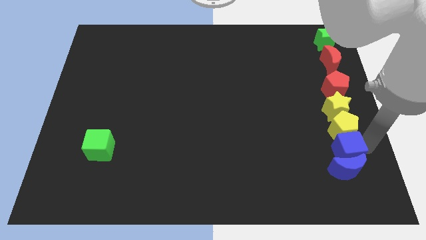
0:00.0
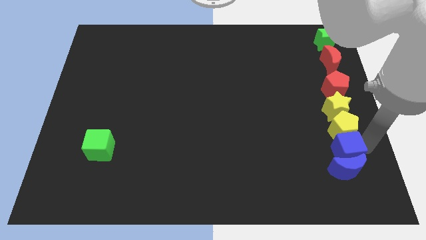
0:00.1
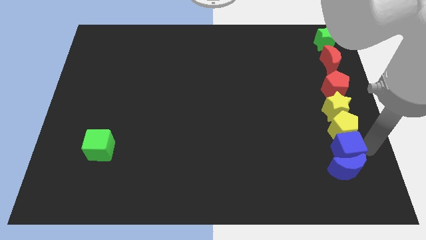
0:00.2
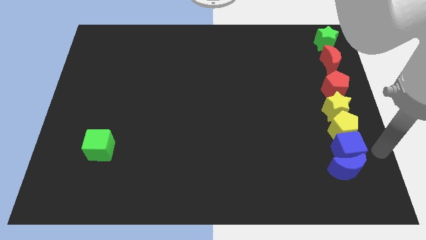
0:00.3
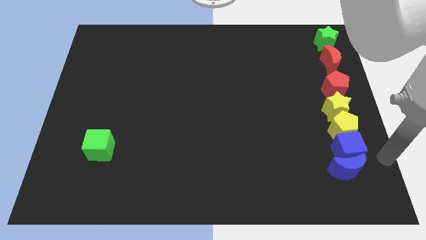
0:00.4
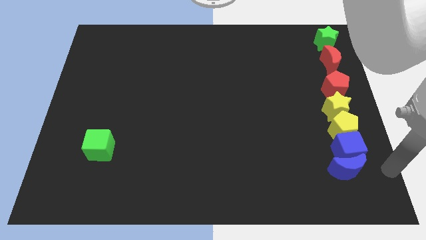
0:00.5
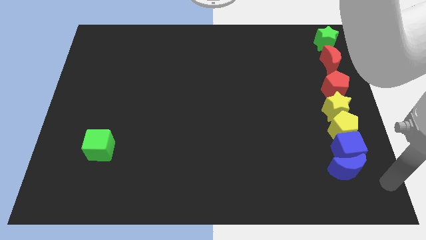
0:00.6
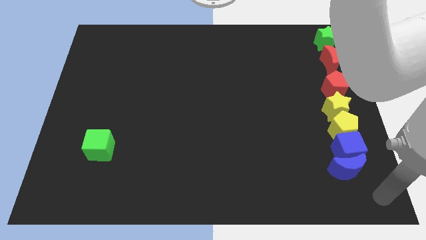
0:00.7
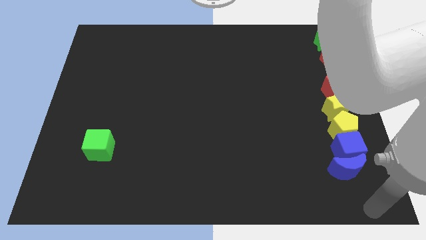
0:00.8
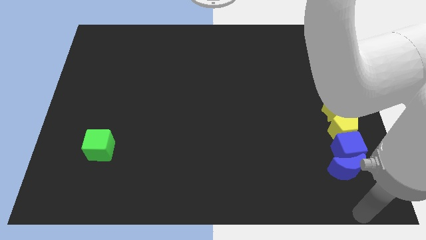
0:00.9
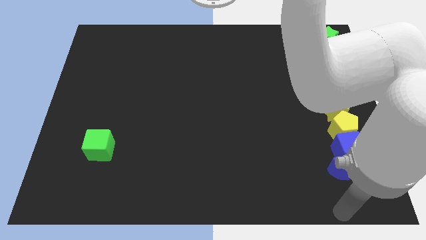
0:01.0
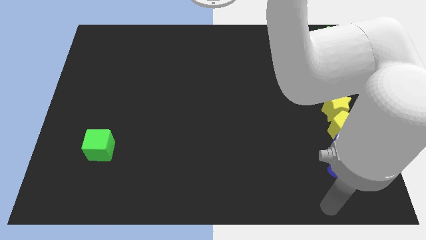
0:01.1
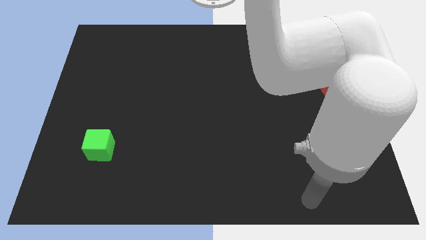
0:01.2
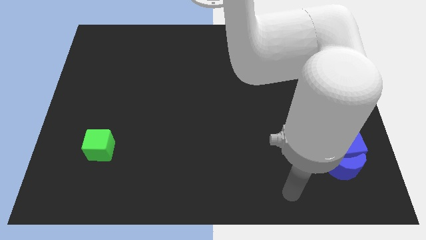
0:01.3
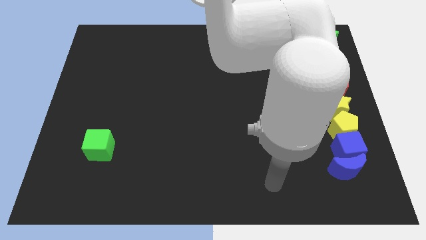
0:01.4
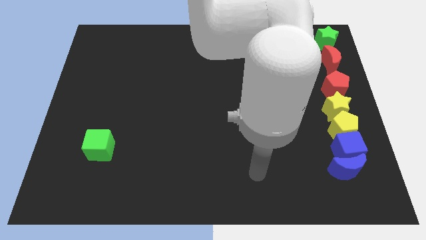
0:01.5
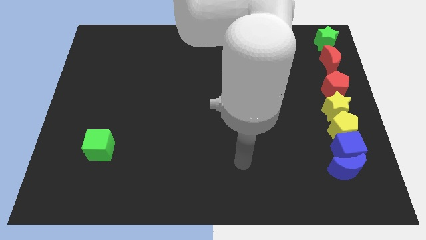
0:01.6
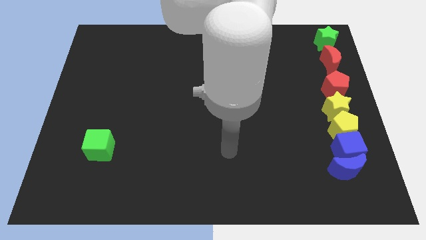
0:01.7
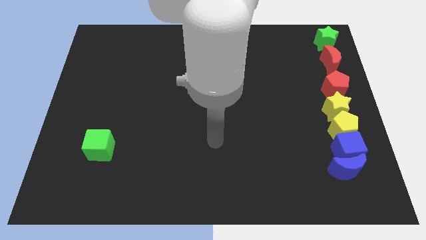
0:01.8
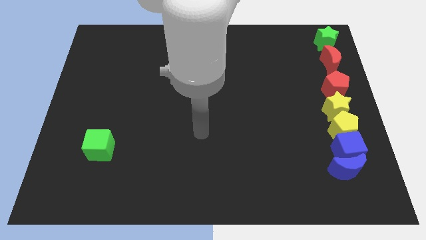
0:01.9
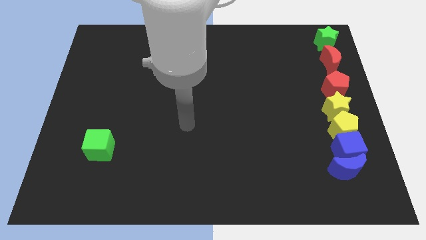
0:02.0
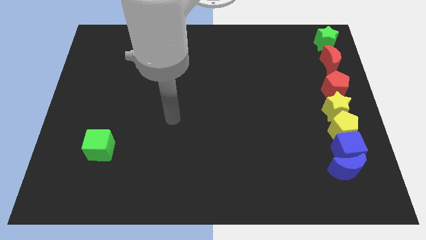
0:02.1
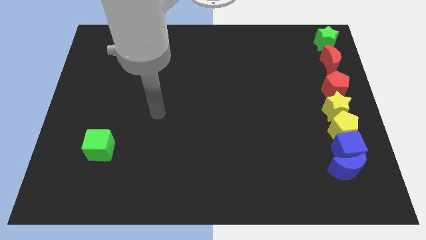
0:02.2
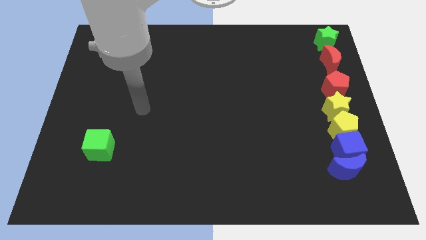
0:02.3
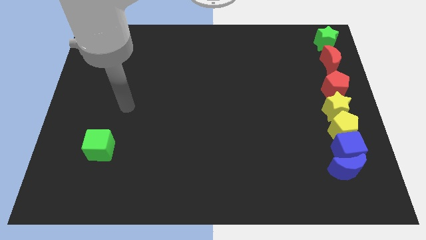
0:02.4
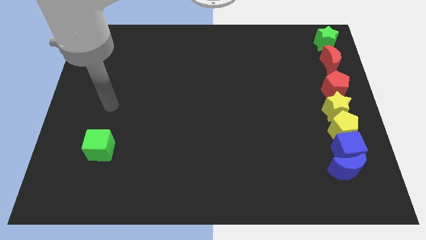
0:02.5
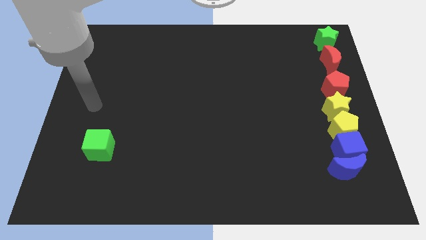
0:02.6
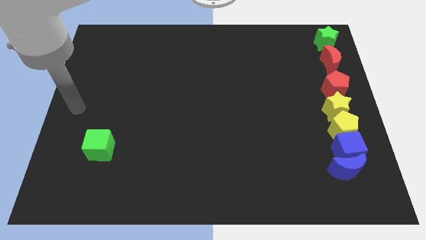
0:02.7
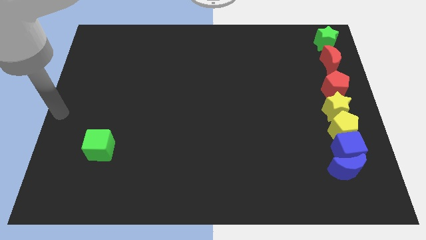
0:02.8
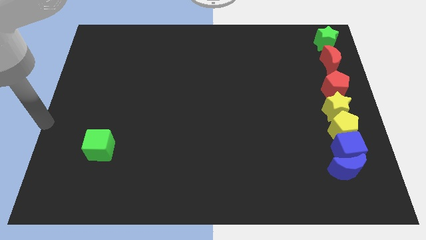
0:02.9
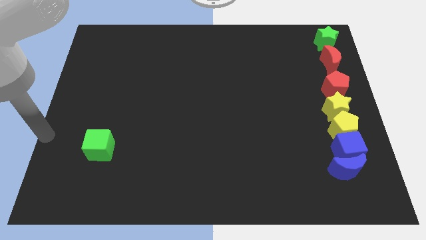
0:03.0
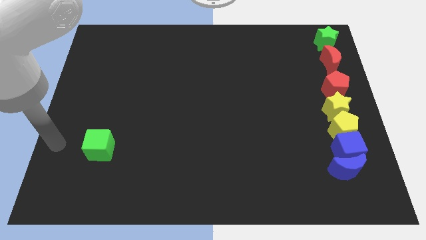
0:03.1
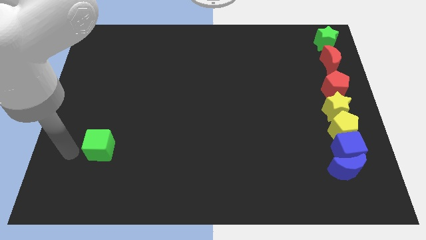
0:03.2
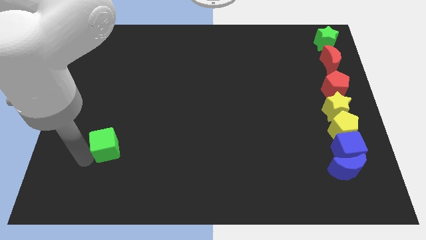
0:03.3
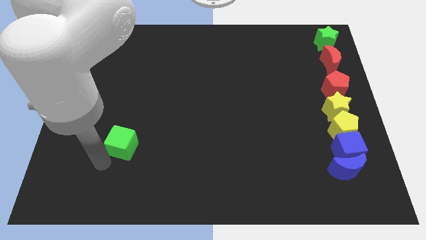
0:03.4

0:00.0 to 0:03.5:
touch the left side of the green cube

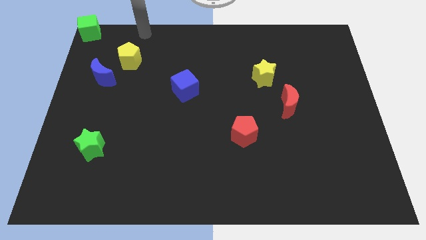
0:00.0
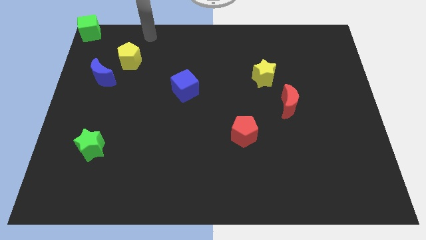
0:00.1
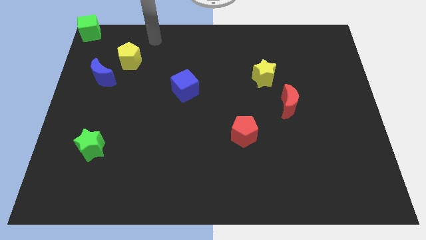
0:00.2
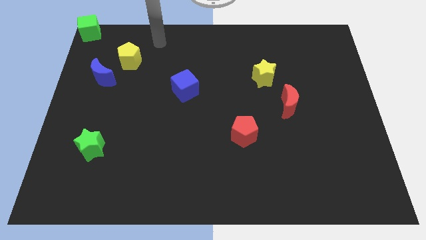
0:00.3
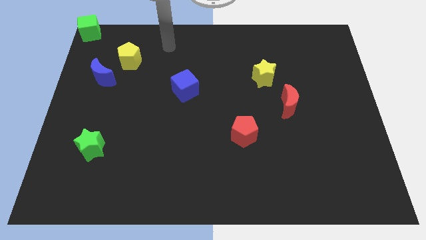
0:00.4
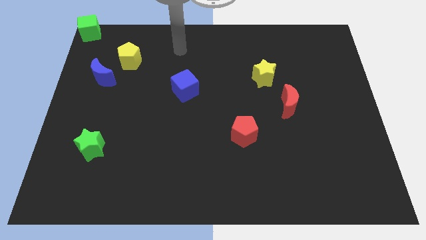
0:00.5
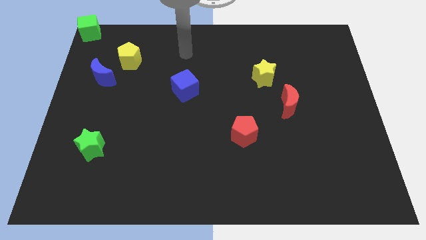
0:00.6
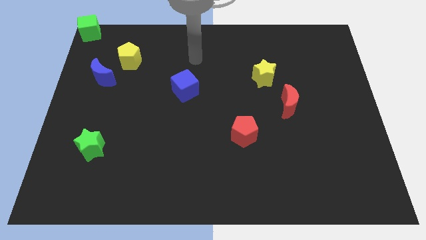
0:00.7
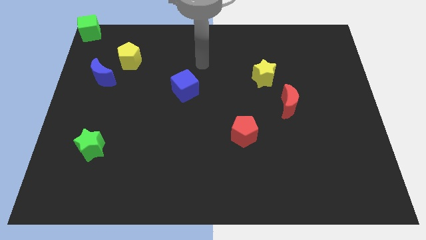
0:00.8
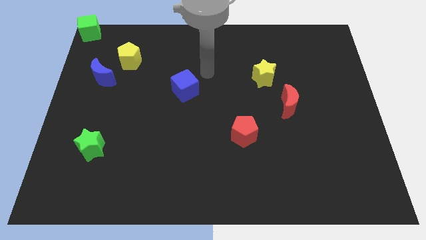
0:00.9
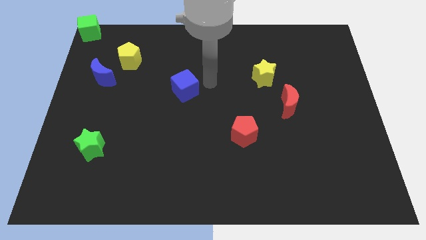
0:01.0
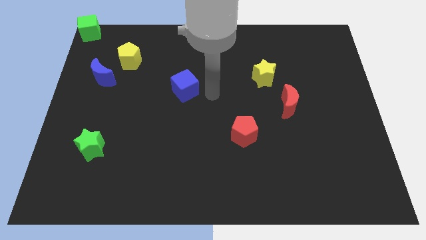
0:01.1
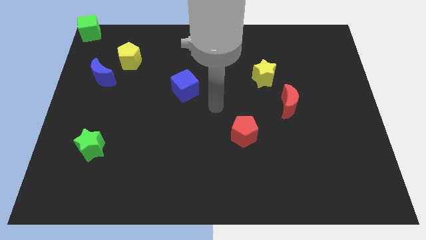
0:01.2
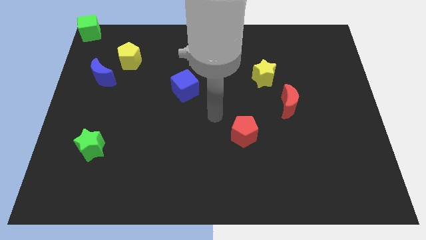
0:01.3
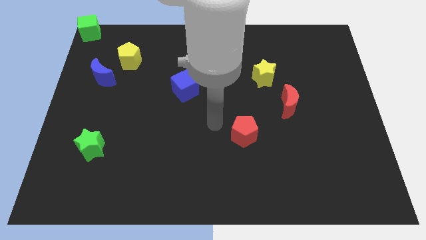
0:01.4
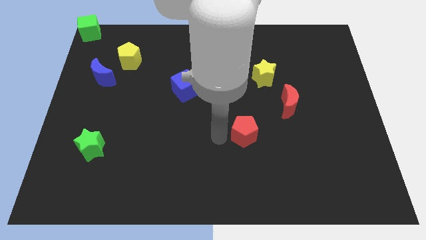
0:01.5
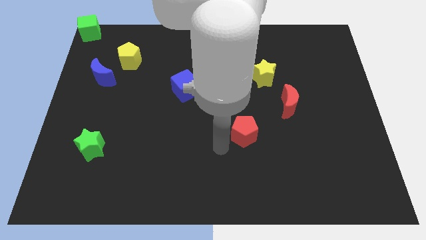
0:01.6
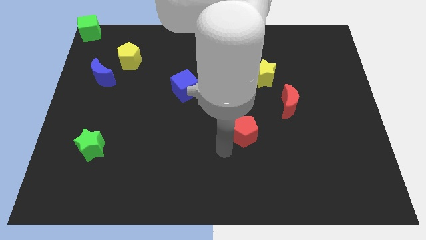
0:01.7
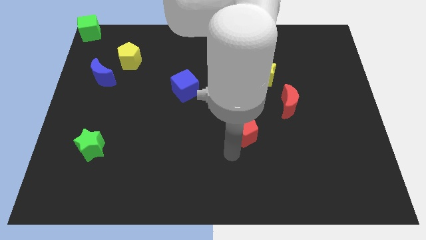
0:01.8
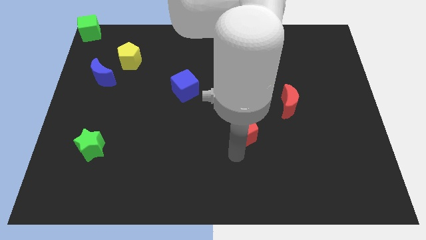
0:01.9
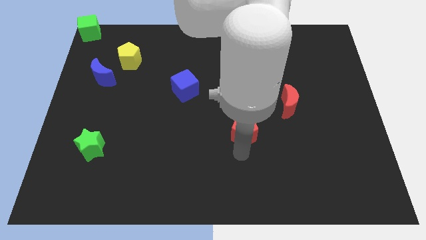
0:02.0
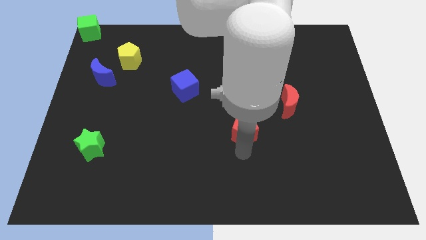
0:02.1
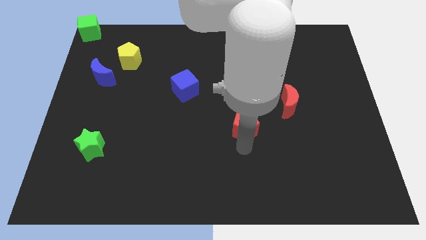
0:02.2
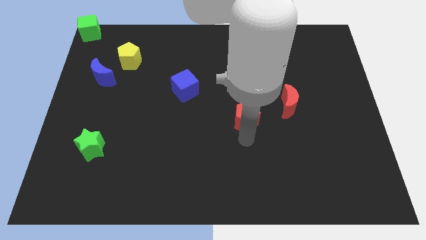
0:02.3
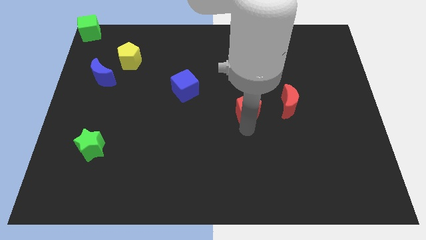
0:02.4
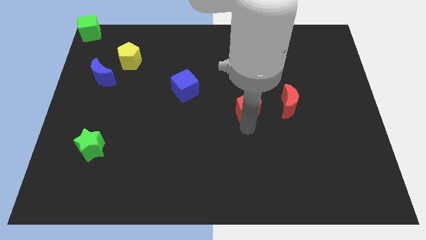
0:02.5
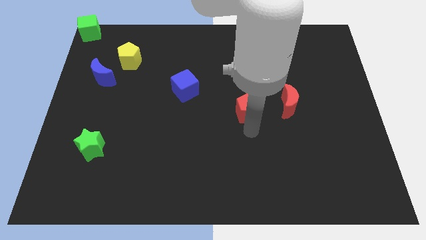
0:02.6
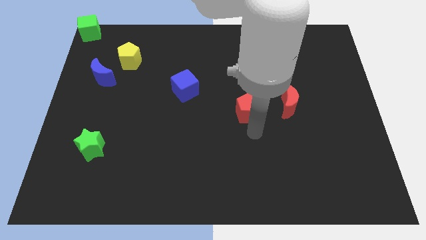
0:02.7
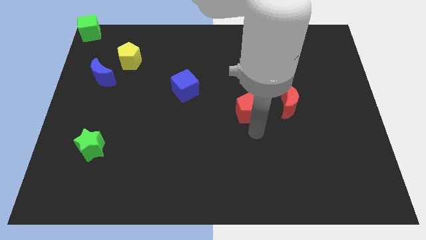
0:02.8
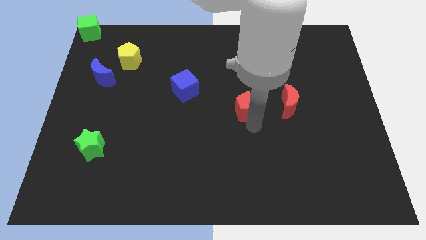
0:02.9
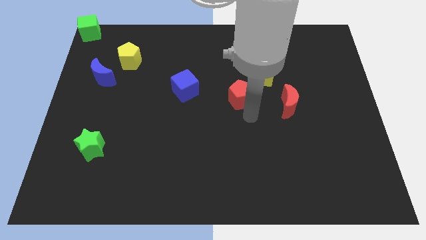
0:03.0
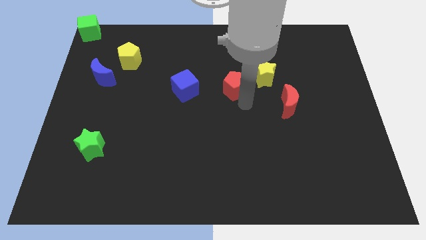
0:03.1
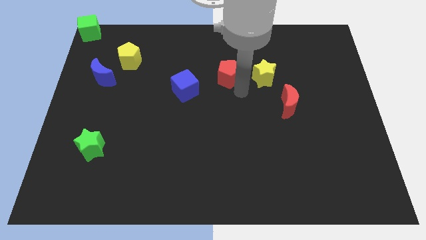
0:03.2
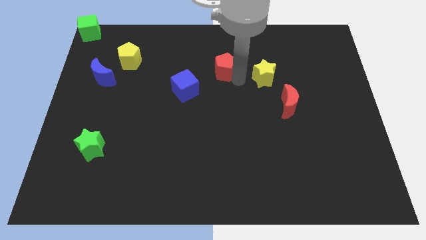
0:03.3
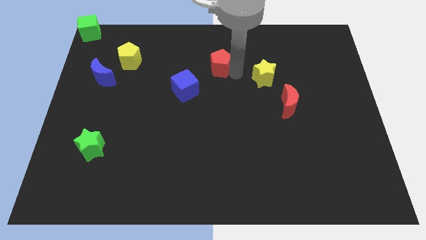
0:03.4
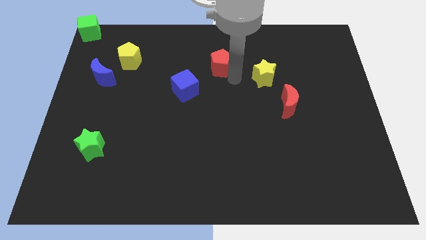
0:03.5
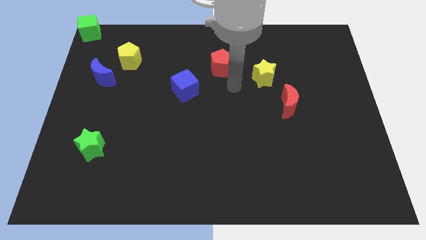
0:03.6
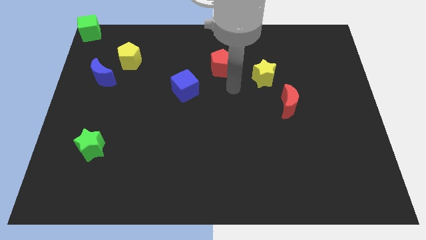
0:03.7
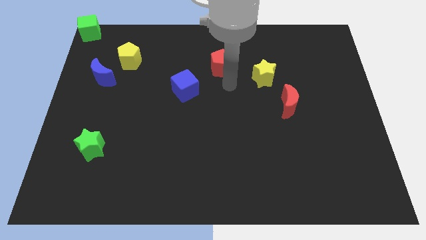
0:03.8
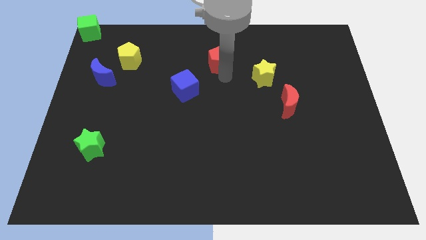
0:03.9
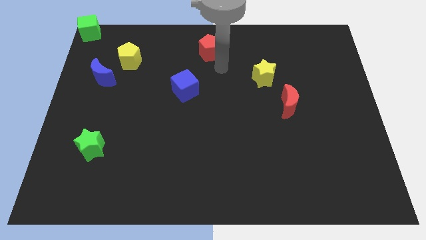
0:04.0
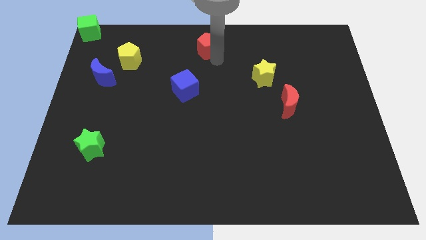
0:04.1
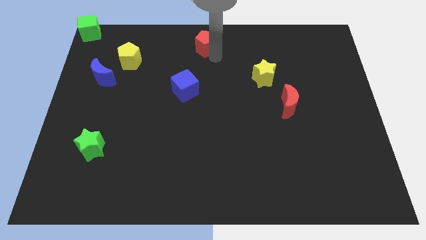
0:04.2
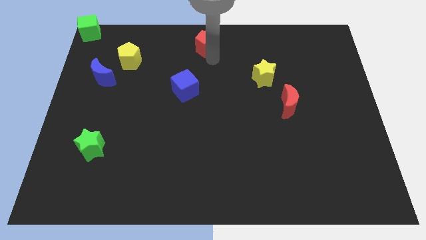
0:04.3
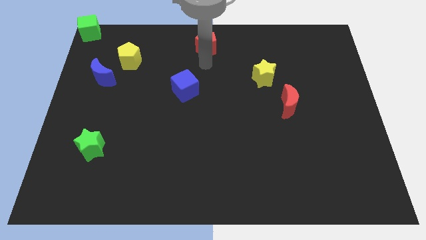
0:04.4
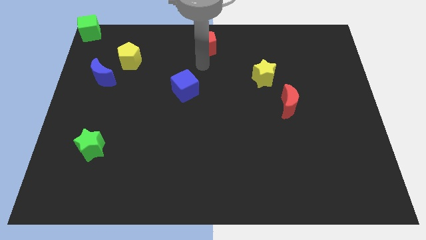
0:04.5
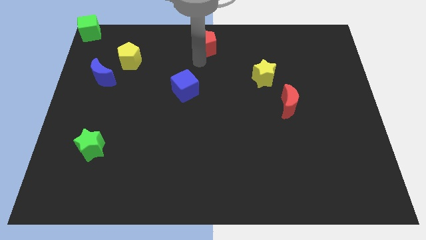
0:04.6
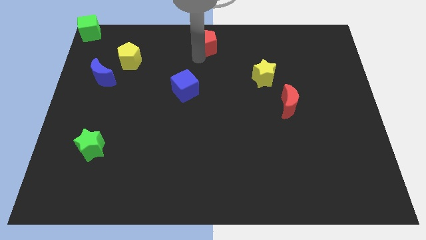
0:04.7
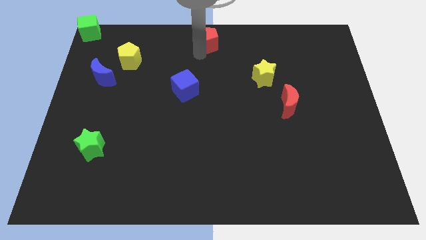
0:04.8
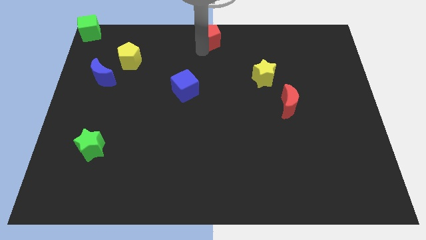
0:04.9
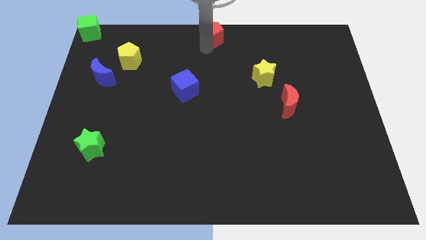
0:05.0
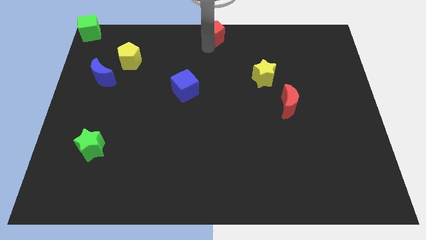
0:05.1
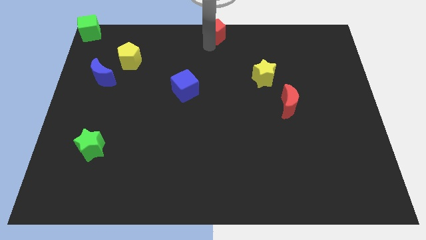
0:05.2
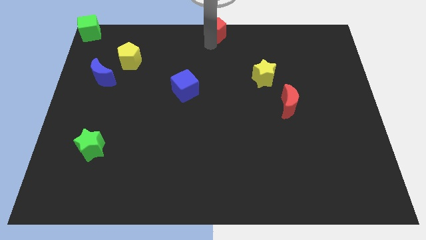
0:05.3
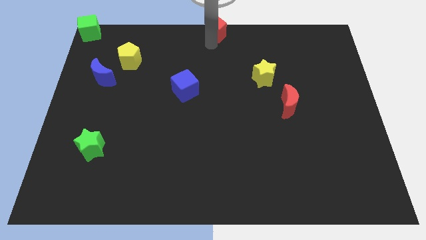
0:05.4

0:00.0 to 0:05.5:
place the red pentagon above the blue cube

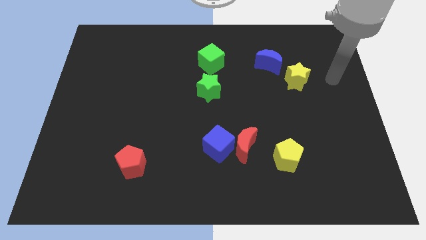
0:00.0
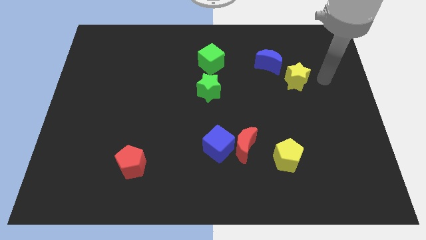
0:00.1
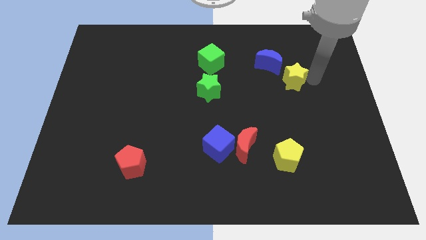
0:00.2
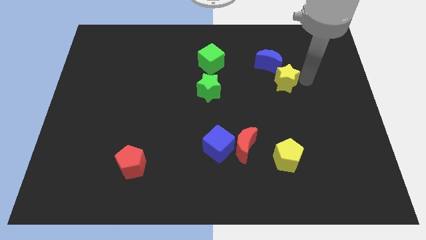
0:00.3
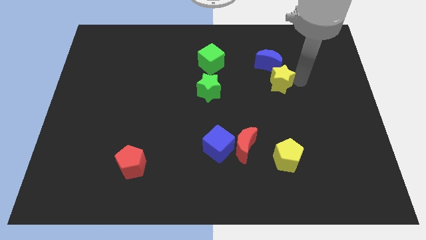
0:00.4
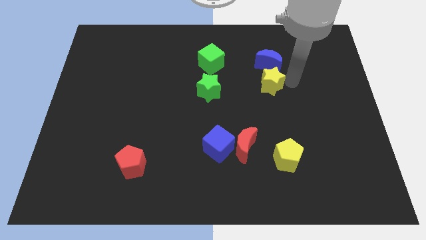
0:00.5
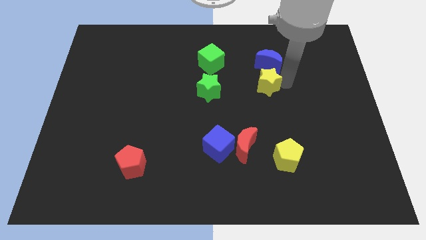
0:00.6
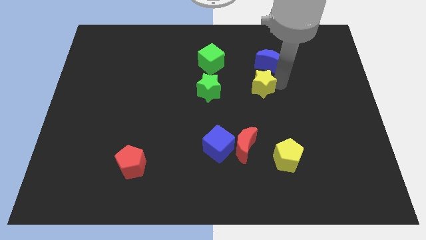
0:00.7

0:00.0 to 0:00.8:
move the yellow star slightly bottom right to the blue moon
